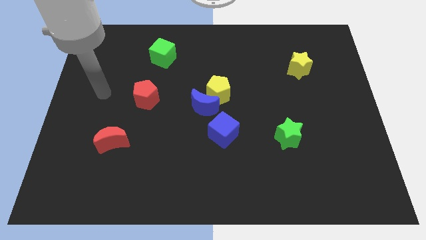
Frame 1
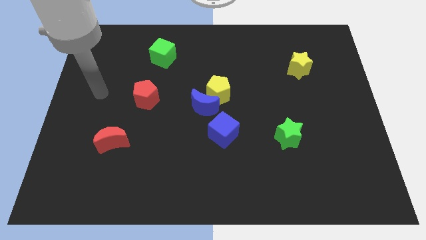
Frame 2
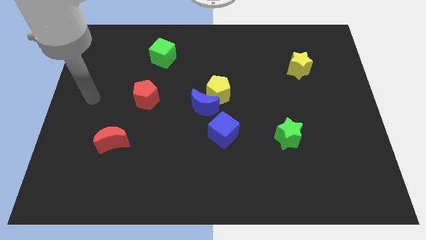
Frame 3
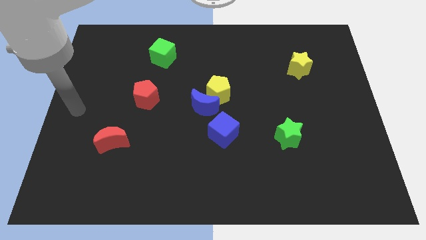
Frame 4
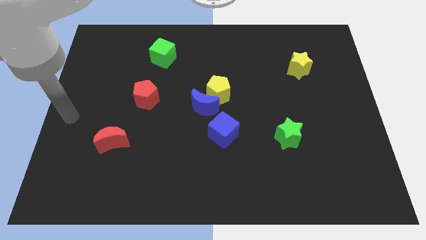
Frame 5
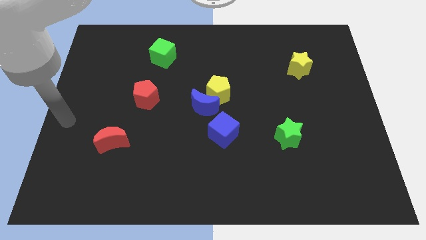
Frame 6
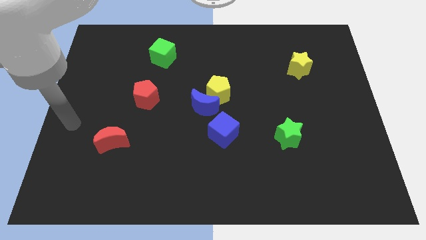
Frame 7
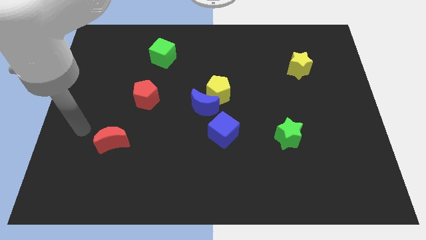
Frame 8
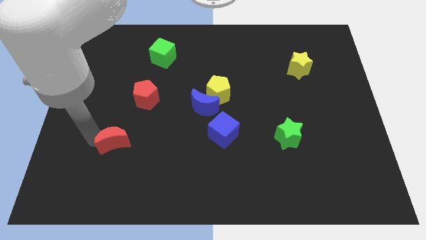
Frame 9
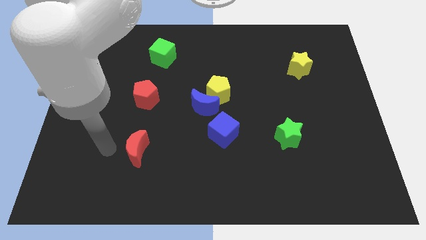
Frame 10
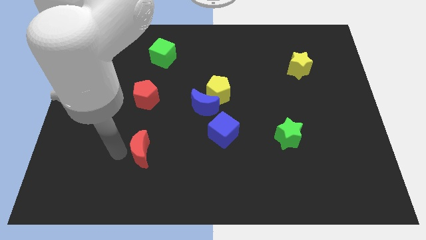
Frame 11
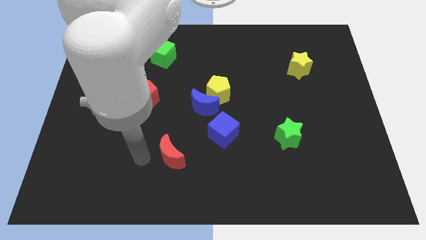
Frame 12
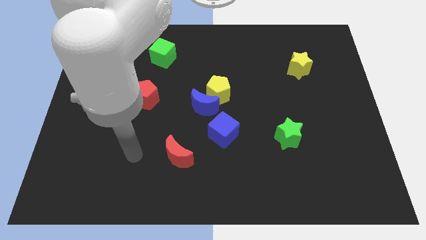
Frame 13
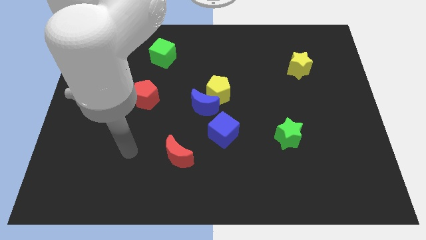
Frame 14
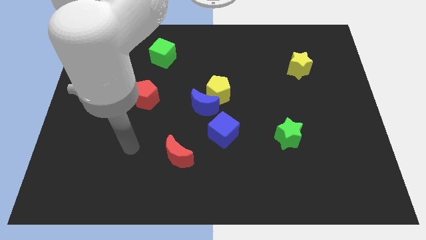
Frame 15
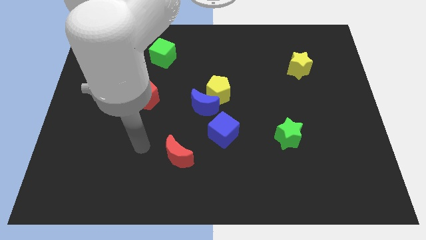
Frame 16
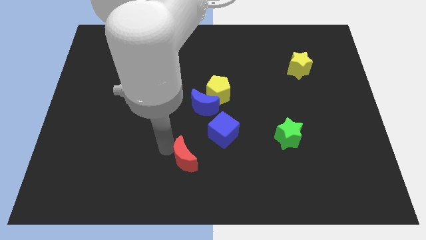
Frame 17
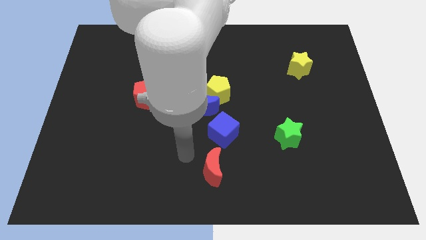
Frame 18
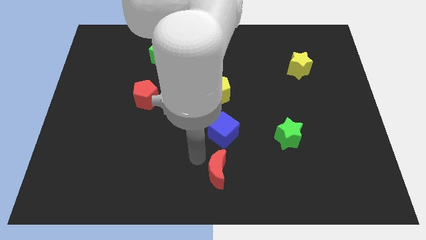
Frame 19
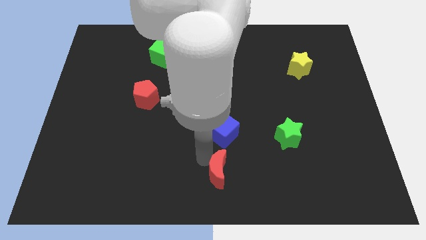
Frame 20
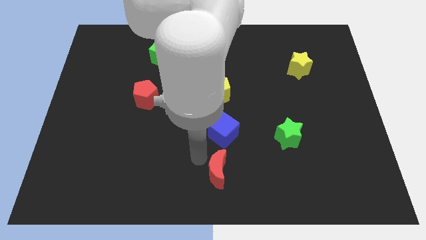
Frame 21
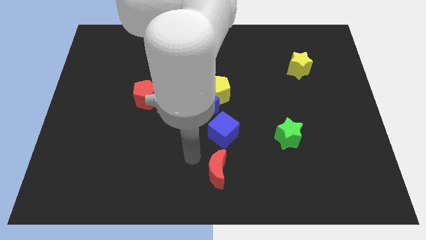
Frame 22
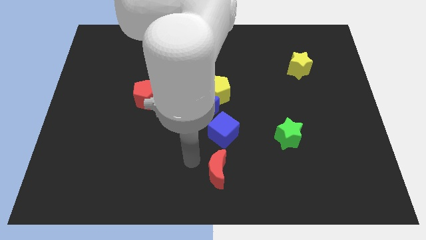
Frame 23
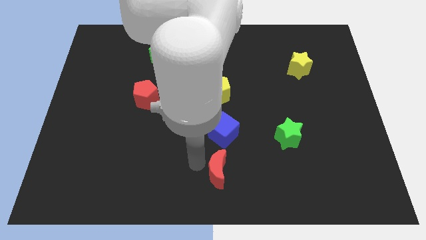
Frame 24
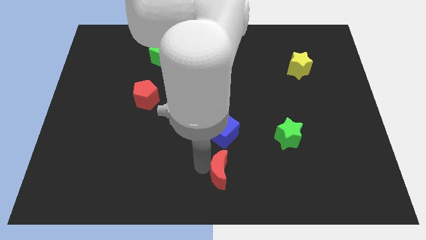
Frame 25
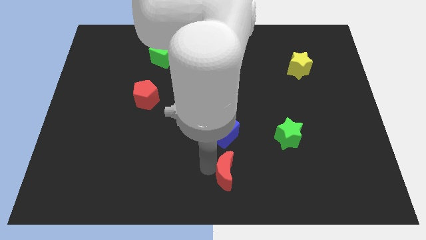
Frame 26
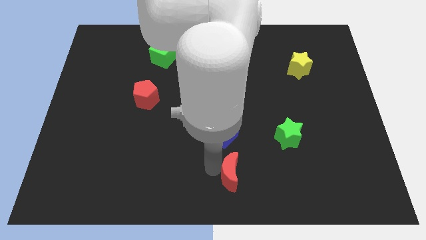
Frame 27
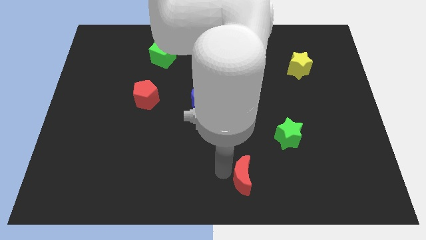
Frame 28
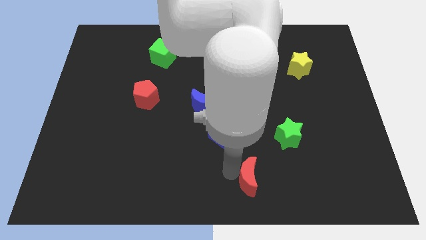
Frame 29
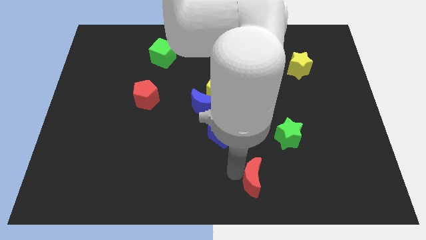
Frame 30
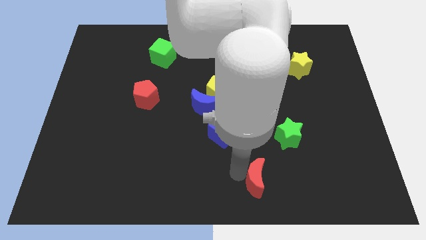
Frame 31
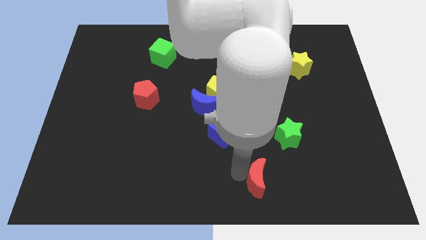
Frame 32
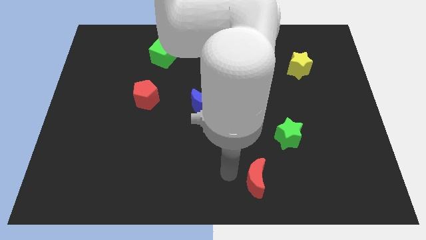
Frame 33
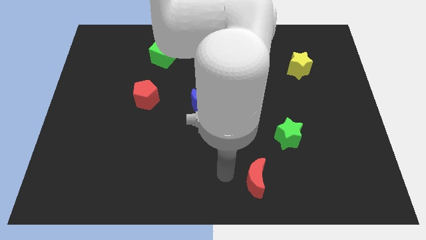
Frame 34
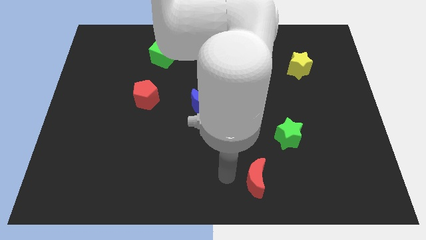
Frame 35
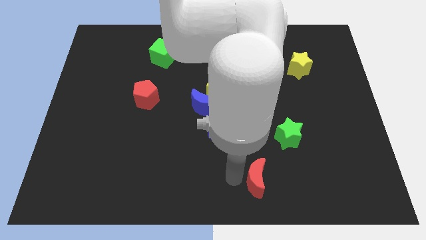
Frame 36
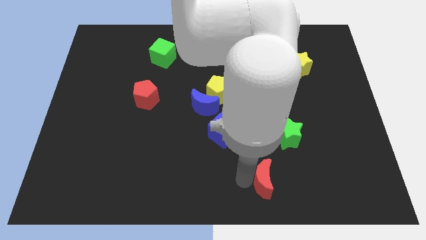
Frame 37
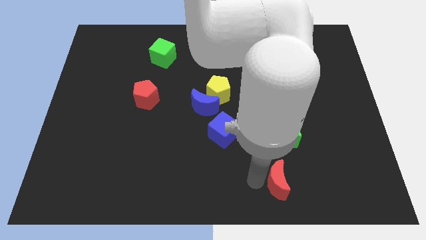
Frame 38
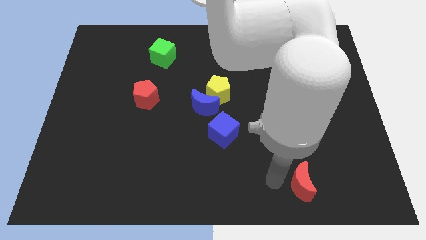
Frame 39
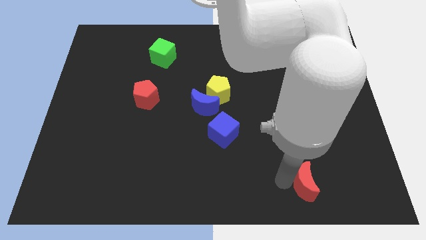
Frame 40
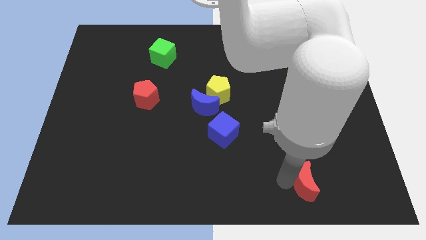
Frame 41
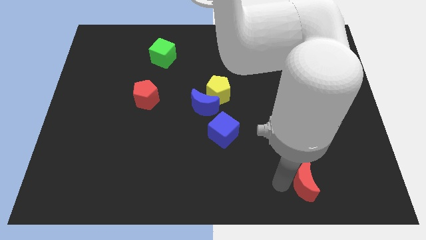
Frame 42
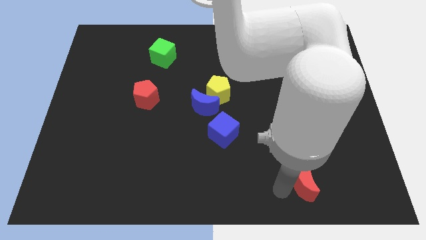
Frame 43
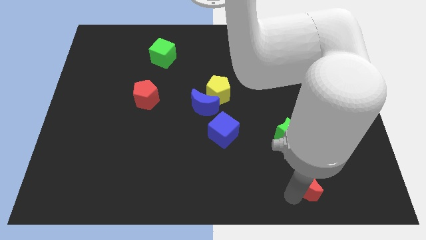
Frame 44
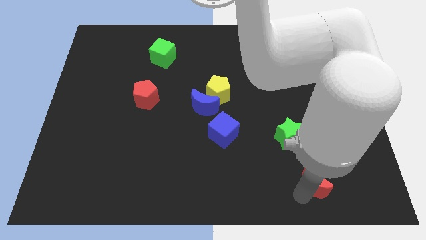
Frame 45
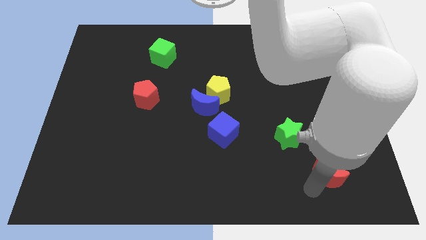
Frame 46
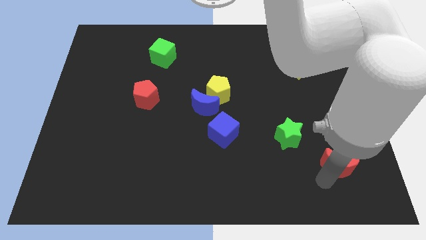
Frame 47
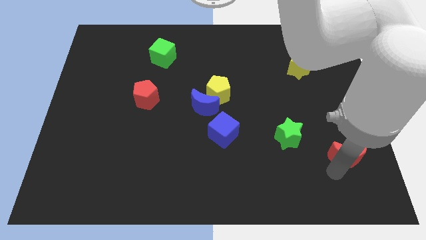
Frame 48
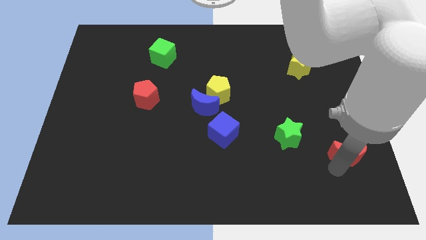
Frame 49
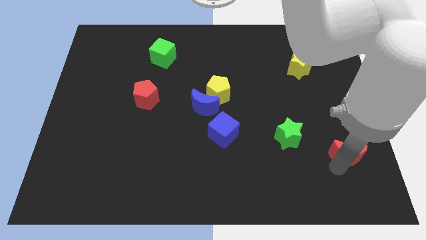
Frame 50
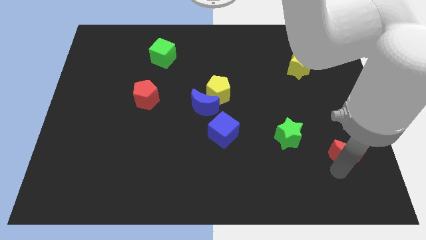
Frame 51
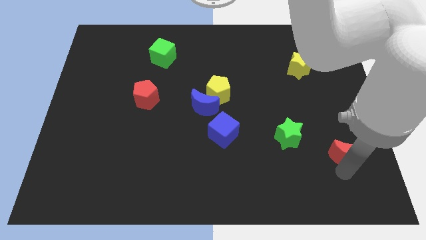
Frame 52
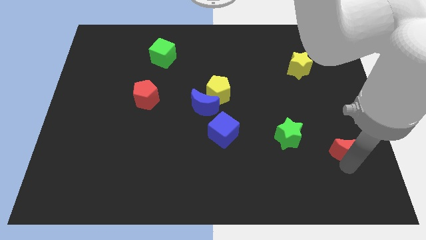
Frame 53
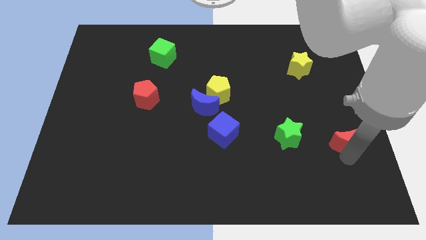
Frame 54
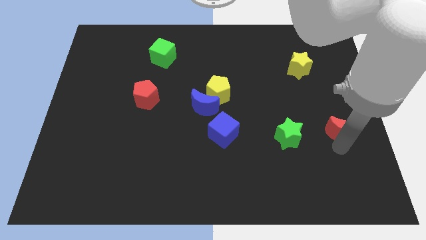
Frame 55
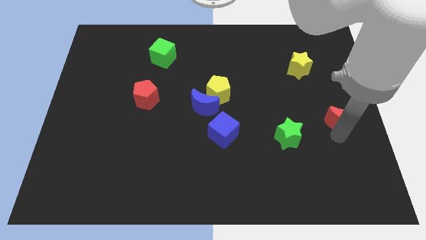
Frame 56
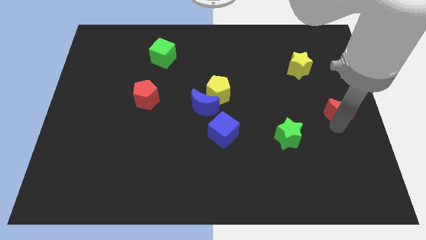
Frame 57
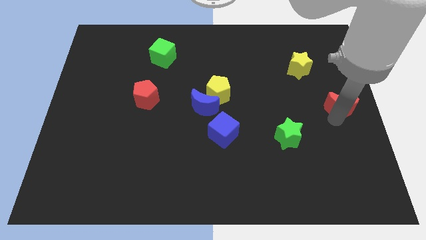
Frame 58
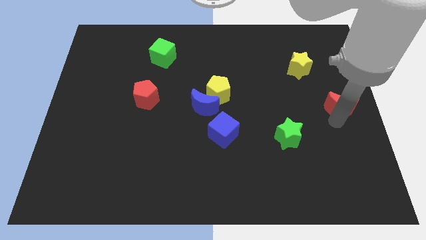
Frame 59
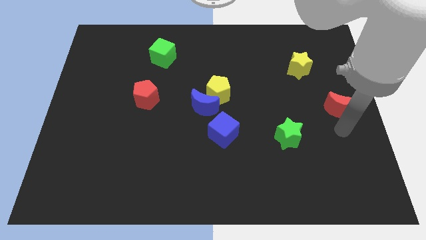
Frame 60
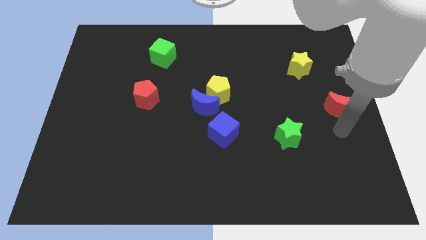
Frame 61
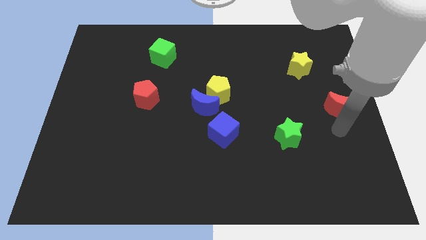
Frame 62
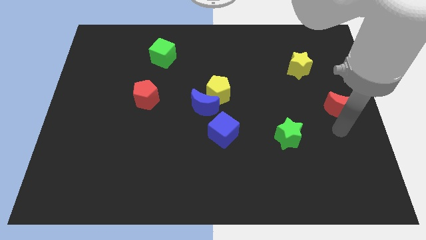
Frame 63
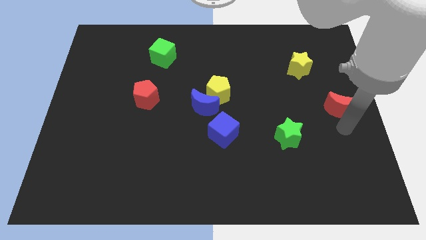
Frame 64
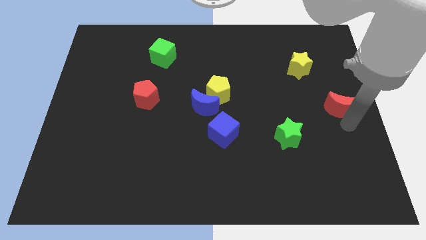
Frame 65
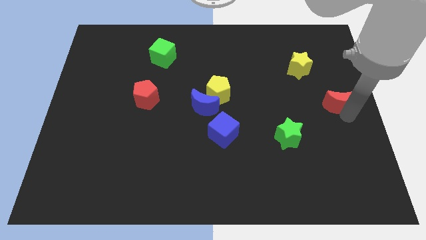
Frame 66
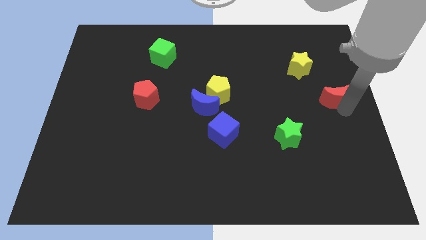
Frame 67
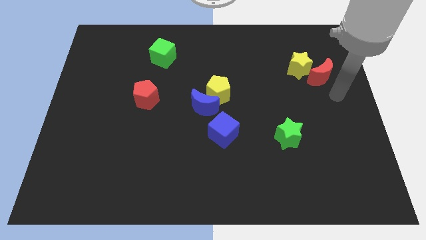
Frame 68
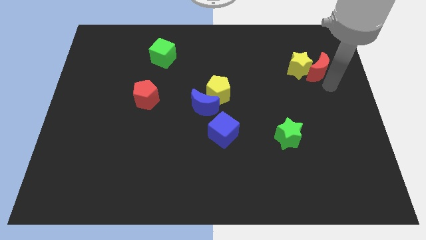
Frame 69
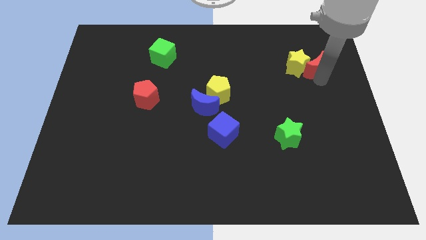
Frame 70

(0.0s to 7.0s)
put the red moon to the yellow star

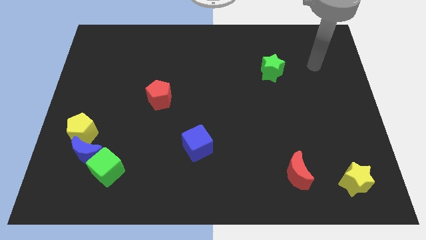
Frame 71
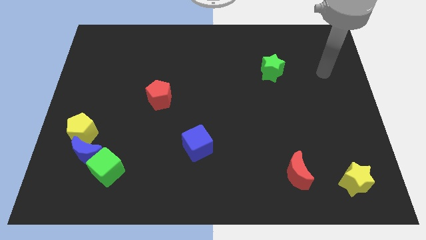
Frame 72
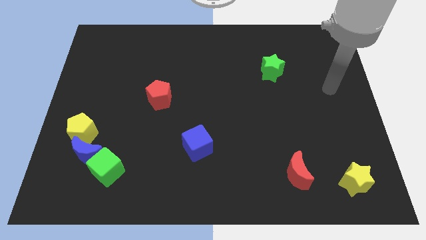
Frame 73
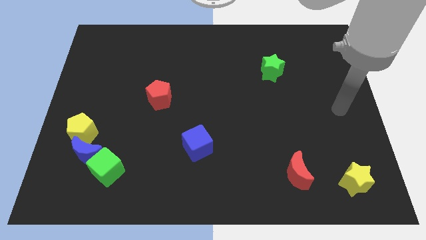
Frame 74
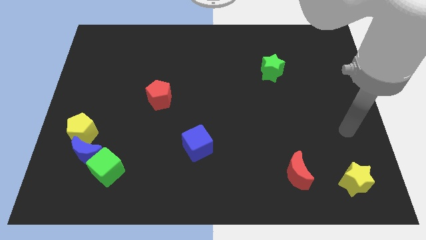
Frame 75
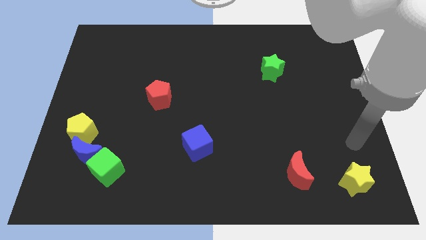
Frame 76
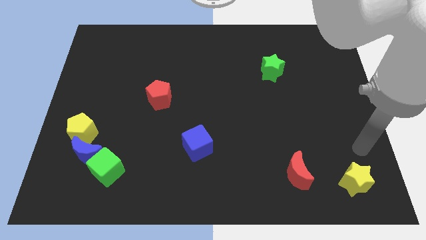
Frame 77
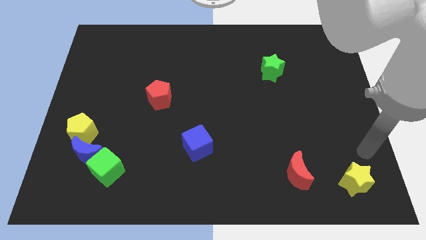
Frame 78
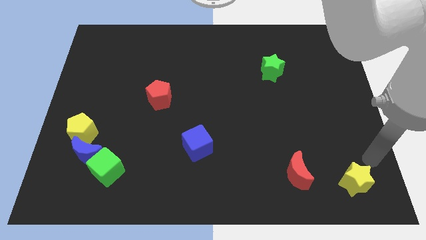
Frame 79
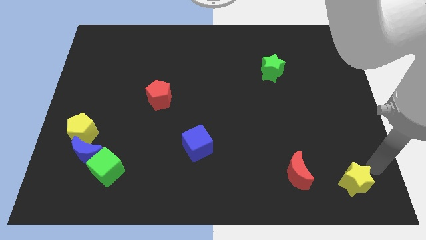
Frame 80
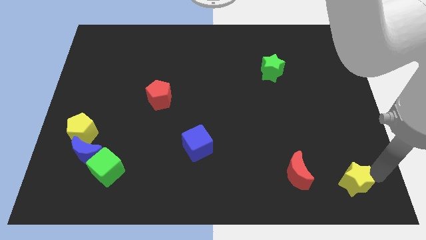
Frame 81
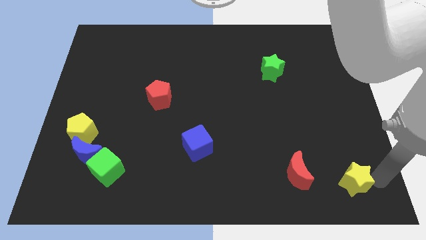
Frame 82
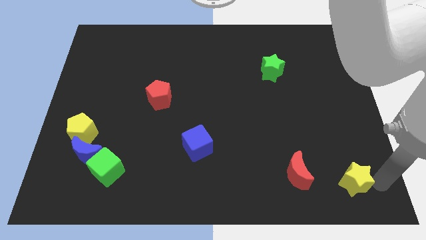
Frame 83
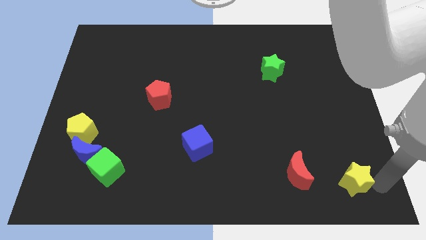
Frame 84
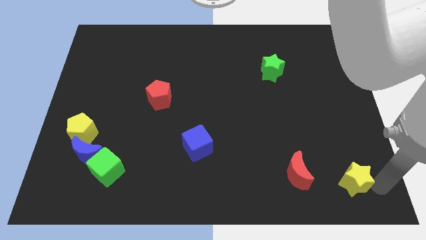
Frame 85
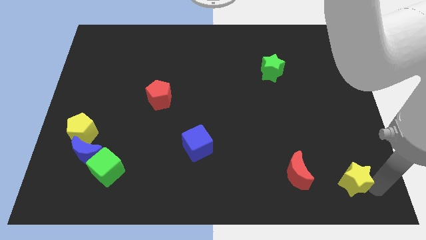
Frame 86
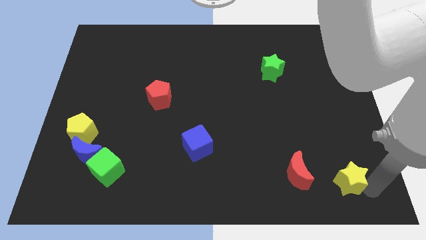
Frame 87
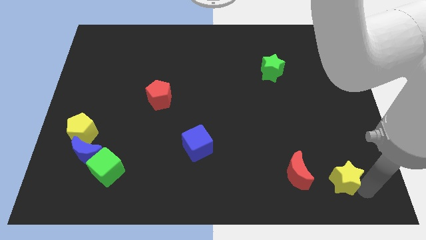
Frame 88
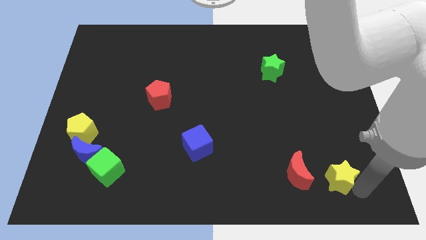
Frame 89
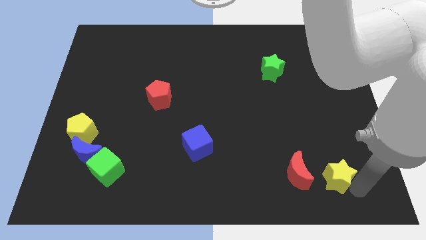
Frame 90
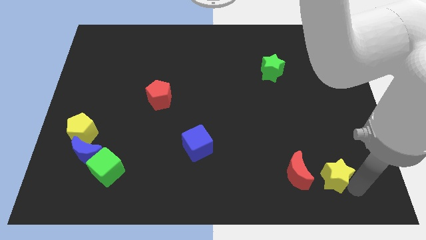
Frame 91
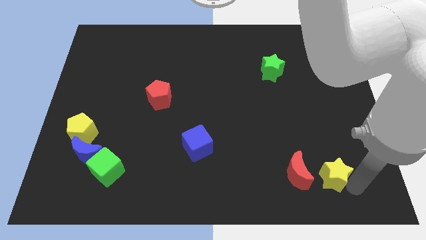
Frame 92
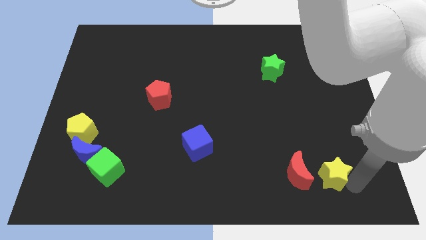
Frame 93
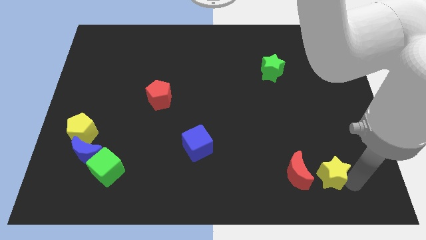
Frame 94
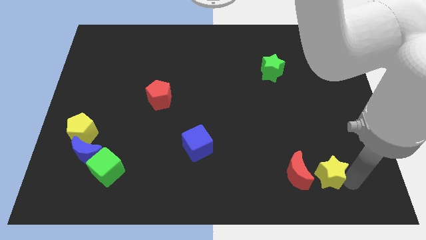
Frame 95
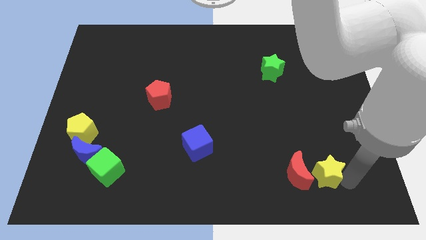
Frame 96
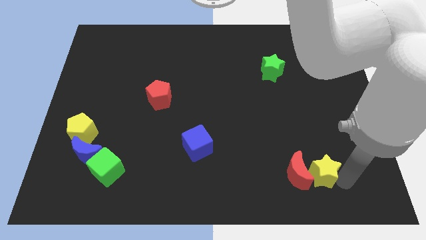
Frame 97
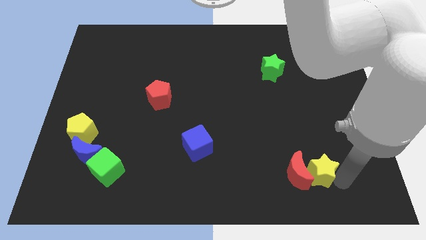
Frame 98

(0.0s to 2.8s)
push the yellow star close to the red moon
